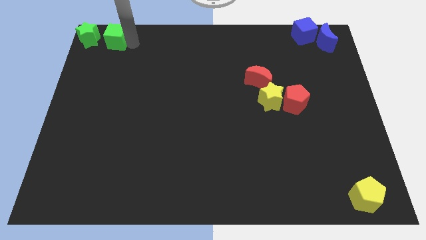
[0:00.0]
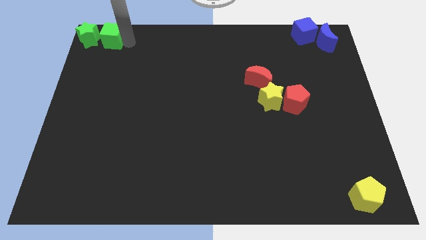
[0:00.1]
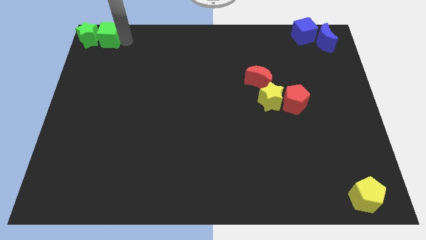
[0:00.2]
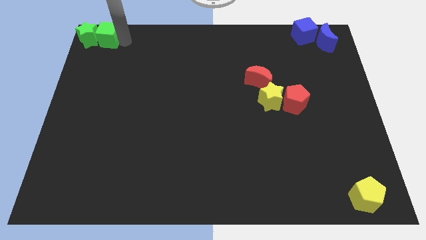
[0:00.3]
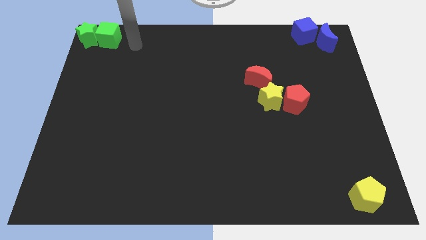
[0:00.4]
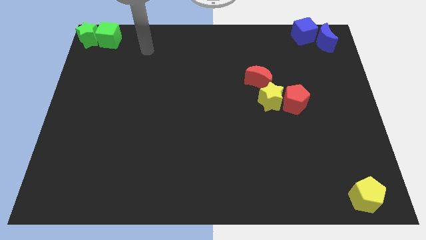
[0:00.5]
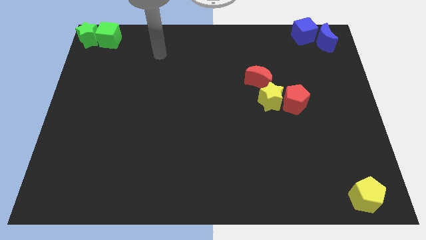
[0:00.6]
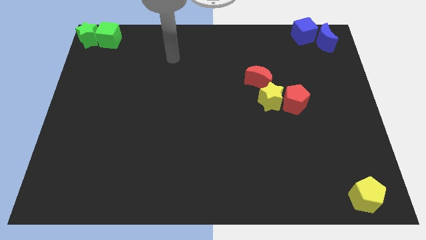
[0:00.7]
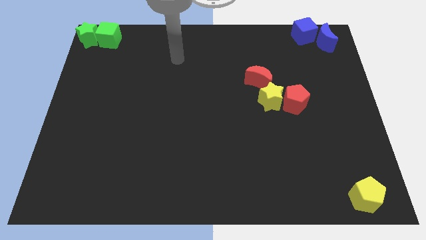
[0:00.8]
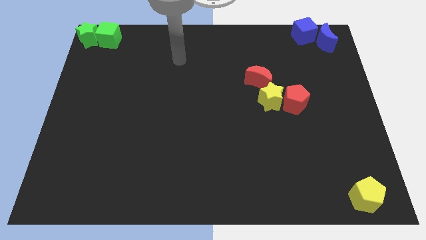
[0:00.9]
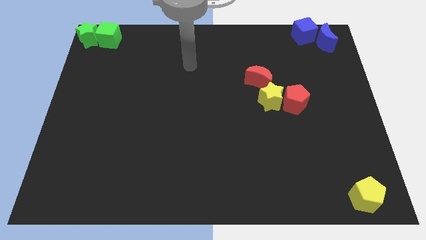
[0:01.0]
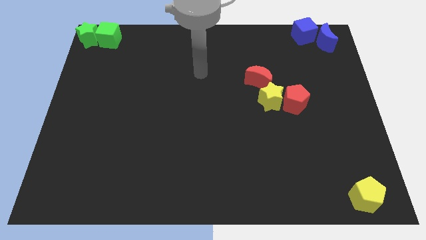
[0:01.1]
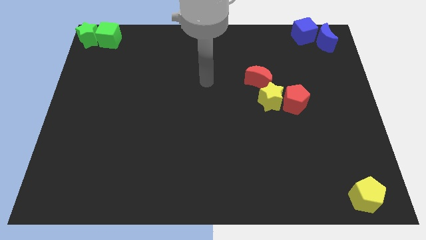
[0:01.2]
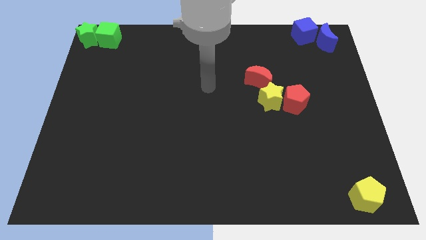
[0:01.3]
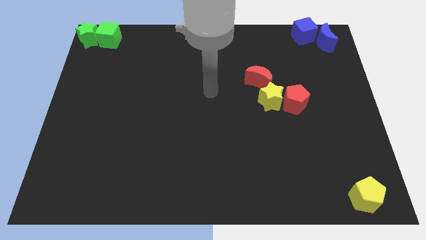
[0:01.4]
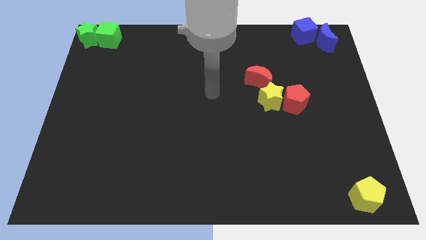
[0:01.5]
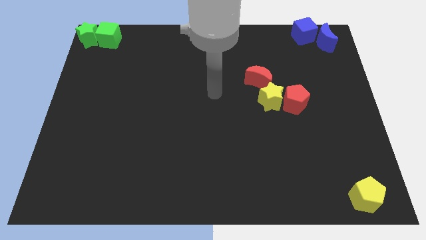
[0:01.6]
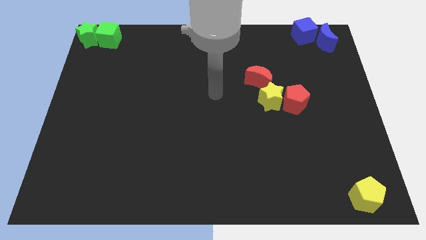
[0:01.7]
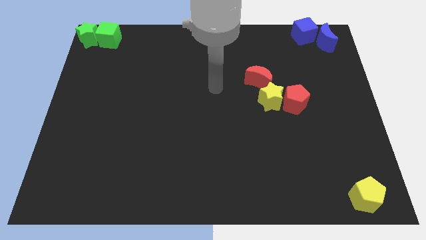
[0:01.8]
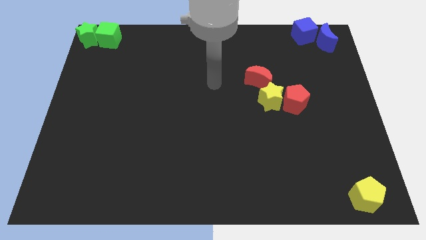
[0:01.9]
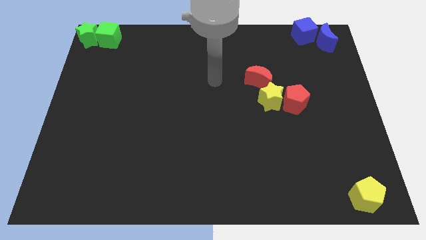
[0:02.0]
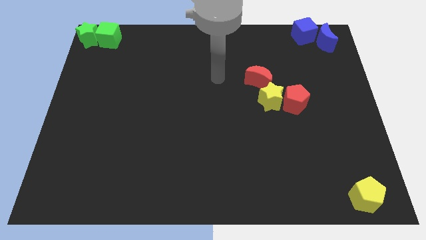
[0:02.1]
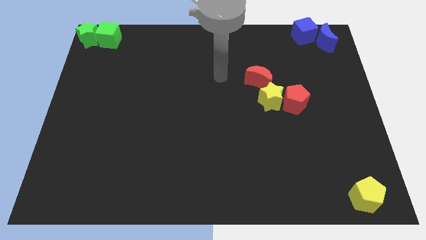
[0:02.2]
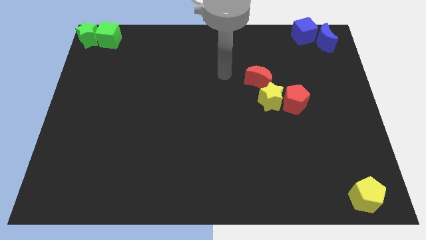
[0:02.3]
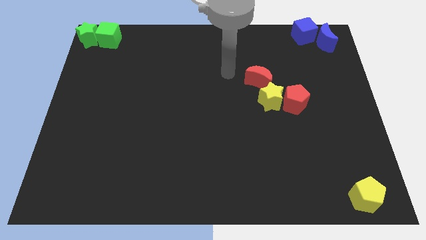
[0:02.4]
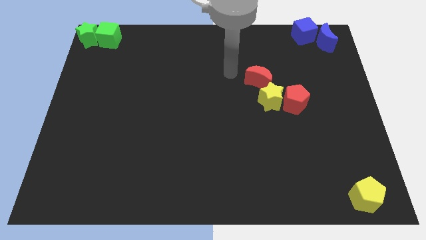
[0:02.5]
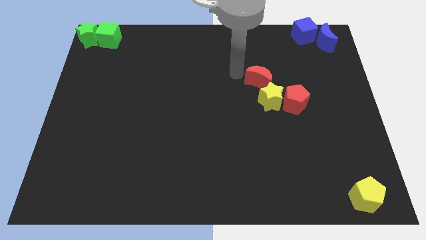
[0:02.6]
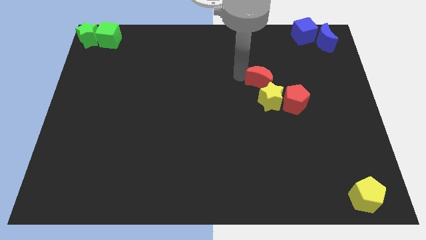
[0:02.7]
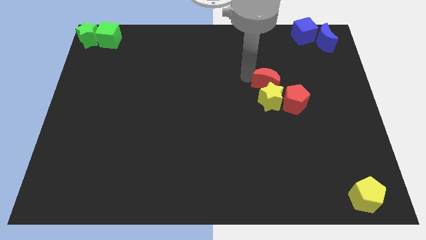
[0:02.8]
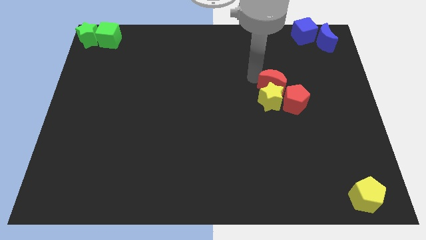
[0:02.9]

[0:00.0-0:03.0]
drag your arm towards red crescent

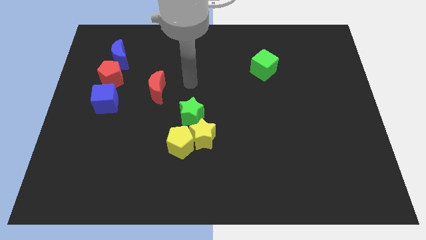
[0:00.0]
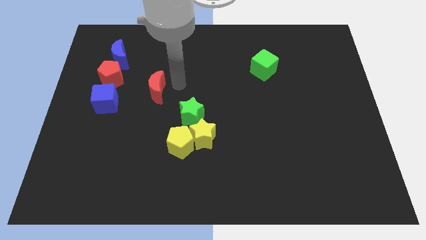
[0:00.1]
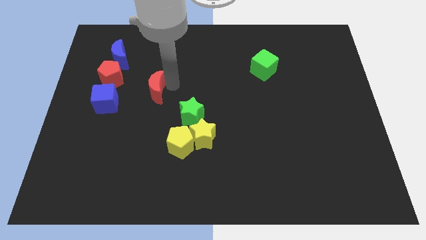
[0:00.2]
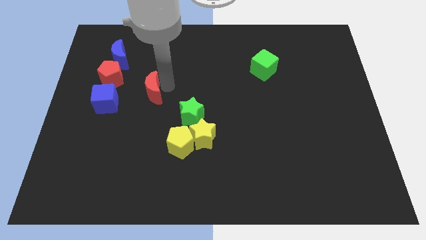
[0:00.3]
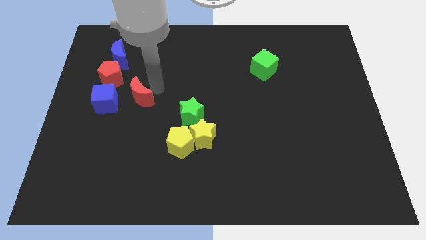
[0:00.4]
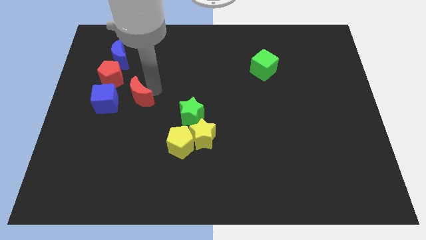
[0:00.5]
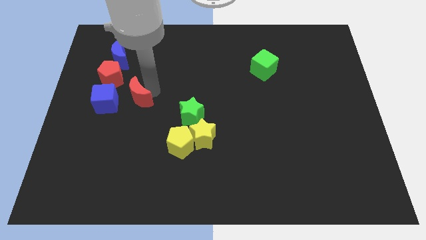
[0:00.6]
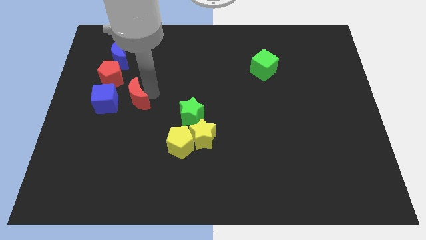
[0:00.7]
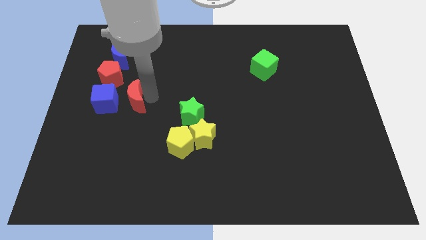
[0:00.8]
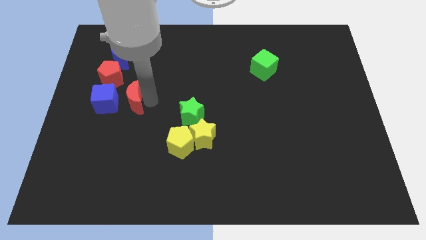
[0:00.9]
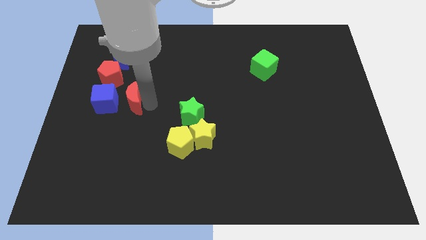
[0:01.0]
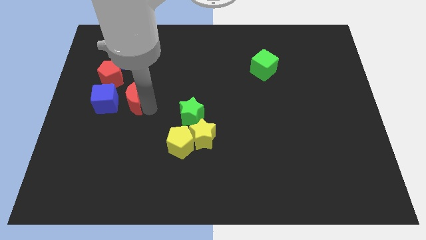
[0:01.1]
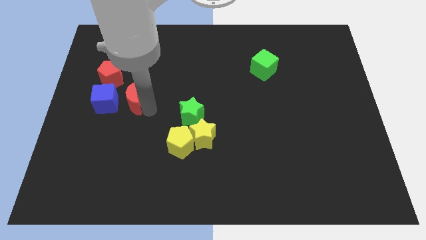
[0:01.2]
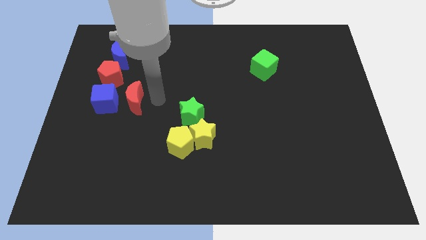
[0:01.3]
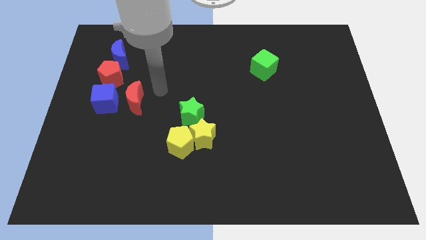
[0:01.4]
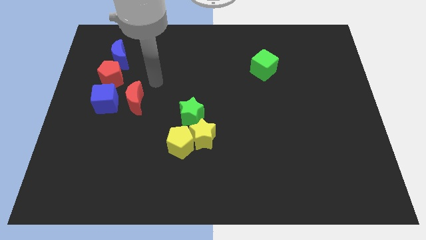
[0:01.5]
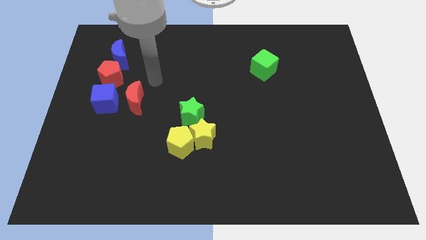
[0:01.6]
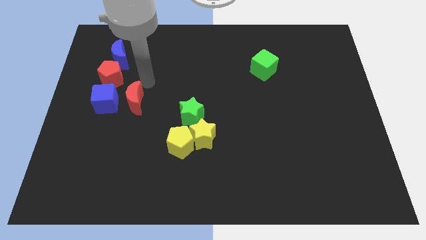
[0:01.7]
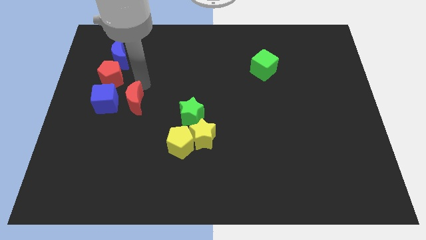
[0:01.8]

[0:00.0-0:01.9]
put the red moon parallel right to the blue cube

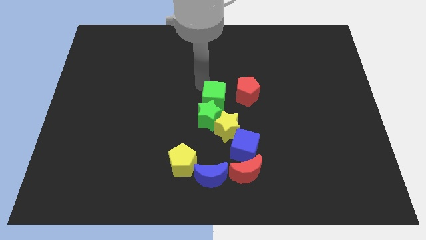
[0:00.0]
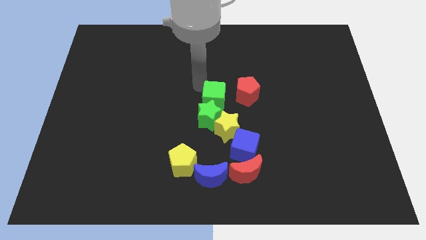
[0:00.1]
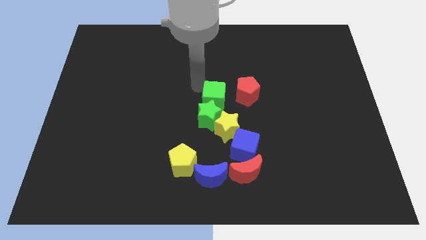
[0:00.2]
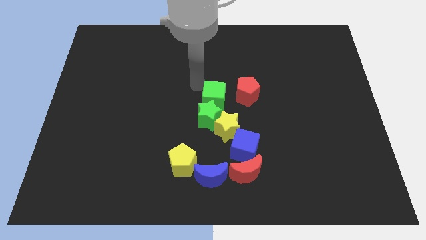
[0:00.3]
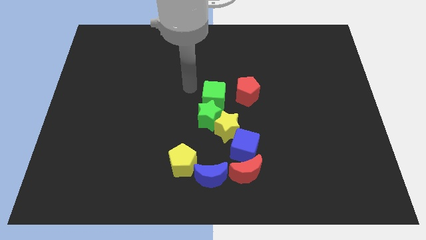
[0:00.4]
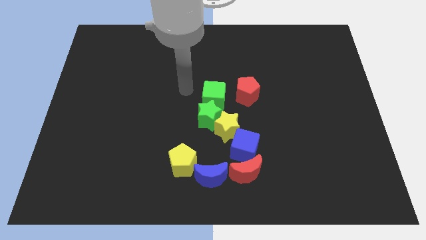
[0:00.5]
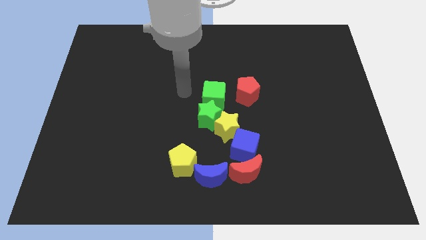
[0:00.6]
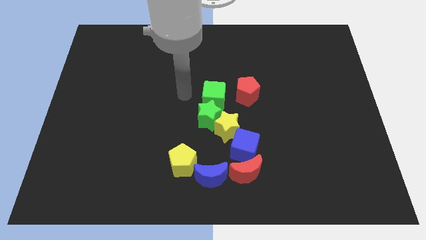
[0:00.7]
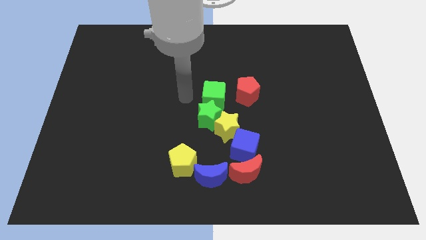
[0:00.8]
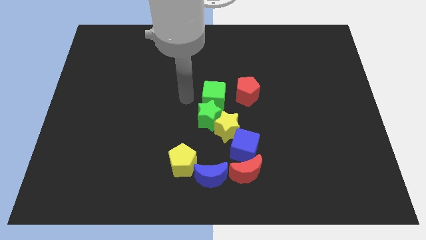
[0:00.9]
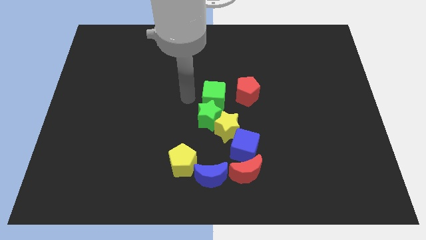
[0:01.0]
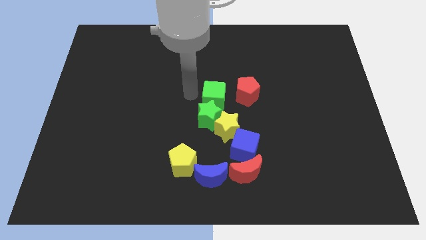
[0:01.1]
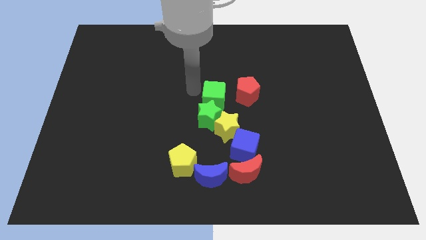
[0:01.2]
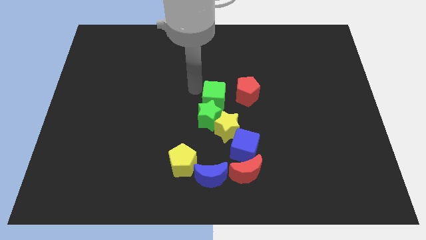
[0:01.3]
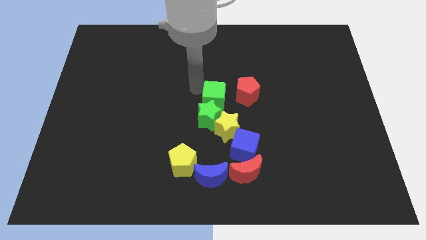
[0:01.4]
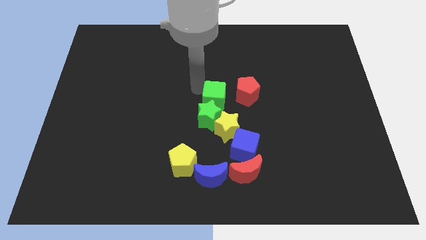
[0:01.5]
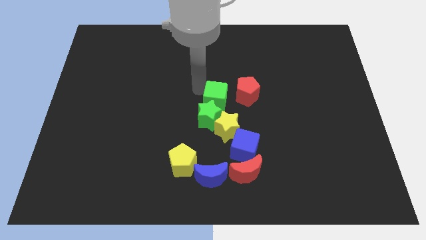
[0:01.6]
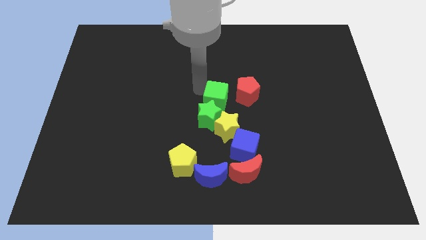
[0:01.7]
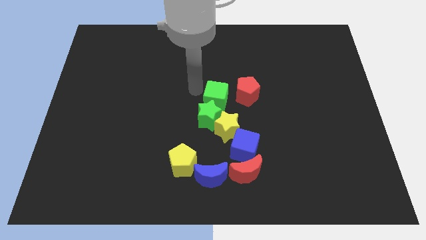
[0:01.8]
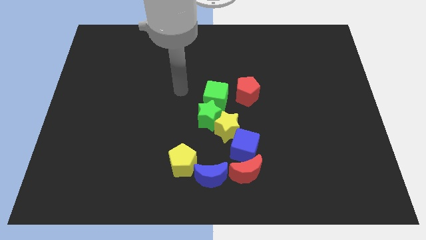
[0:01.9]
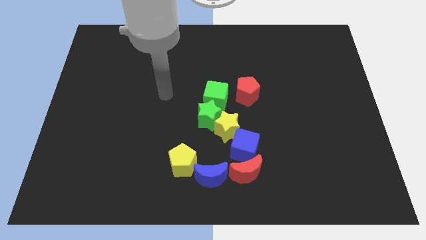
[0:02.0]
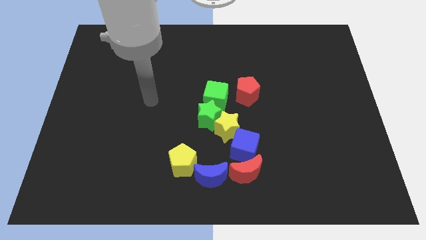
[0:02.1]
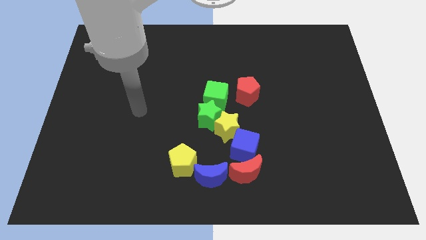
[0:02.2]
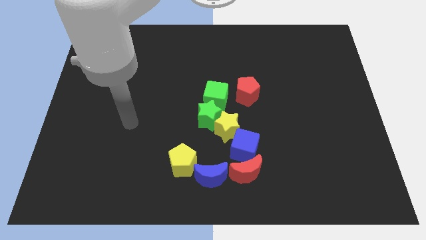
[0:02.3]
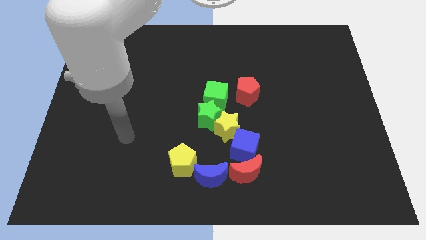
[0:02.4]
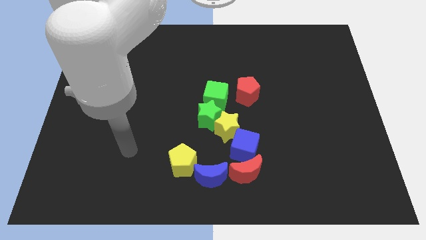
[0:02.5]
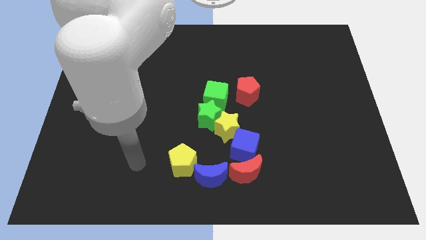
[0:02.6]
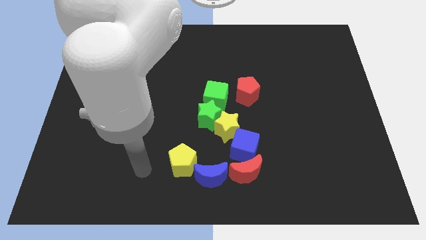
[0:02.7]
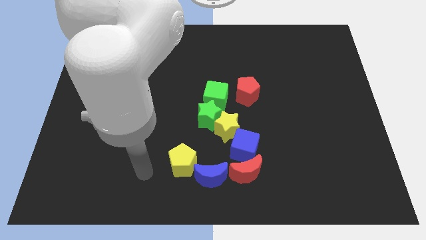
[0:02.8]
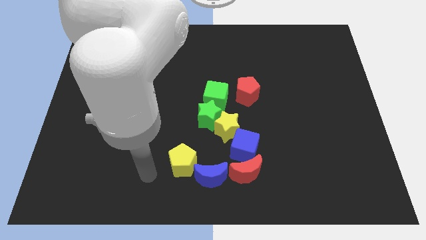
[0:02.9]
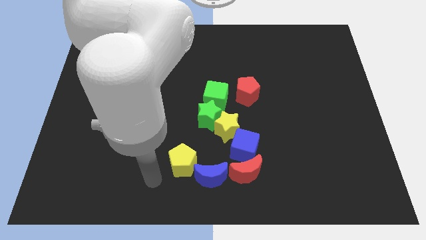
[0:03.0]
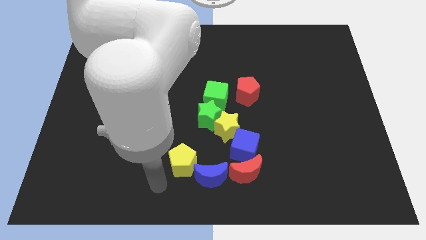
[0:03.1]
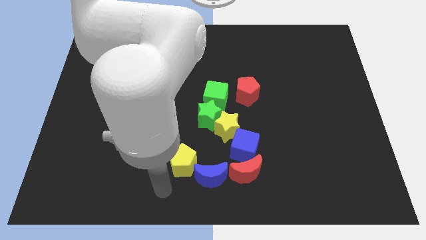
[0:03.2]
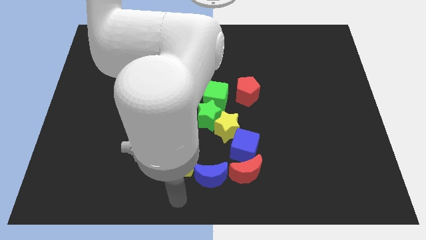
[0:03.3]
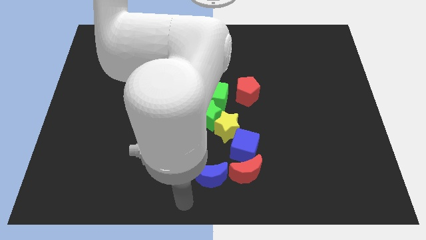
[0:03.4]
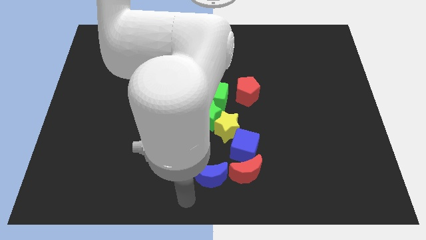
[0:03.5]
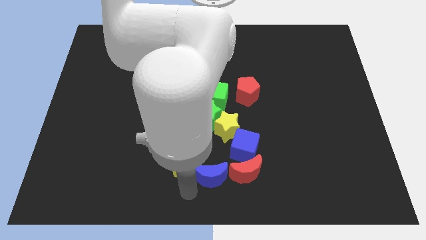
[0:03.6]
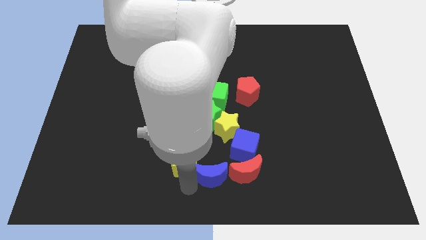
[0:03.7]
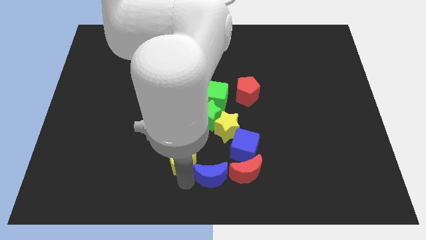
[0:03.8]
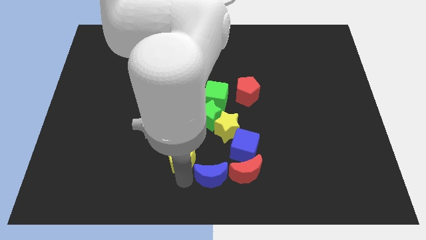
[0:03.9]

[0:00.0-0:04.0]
move your arm near the yellow pentagon
